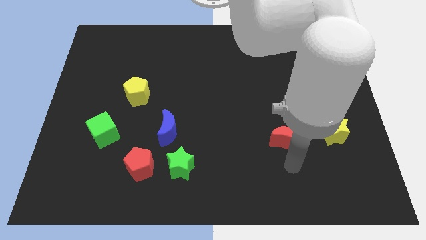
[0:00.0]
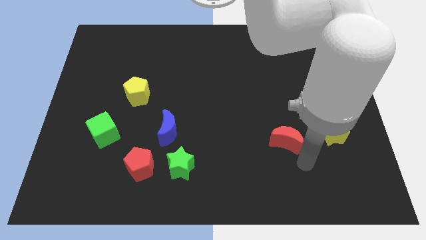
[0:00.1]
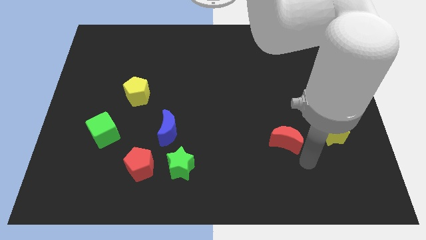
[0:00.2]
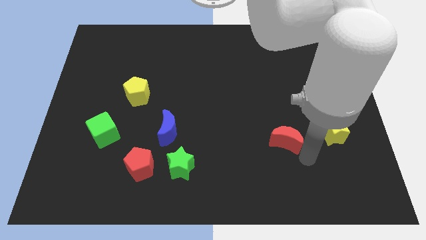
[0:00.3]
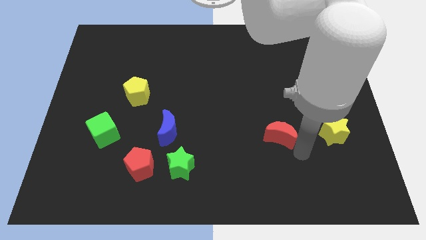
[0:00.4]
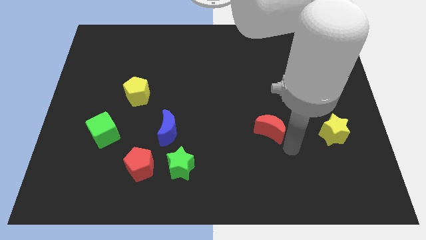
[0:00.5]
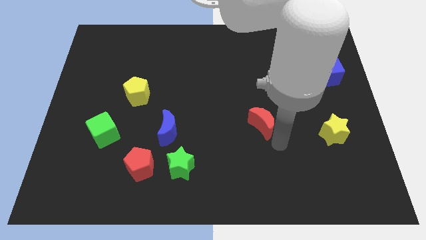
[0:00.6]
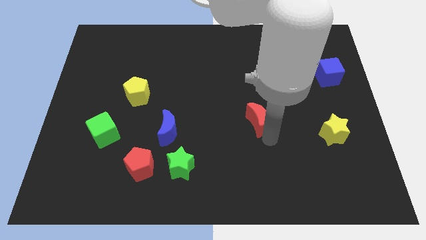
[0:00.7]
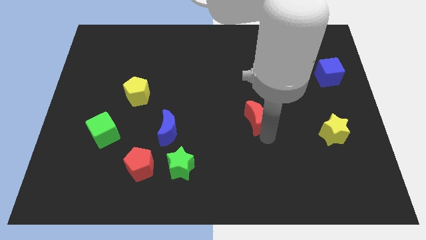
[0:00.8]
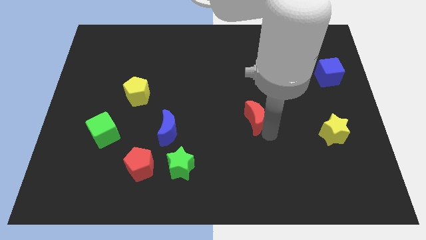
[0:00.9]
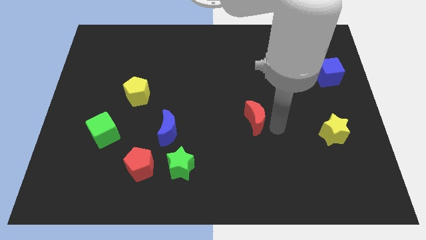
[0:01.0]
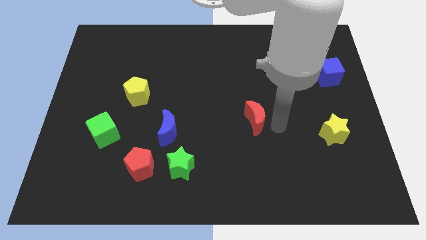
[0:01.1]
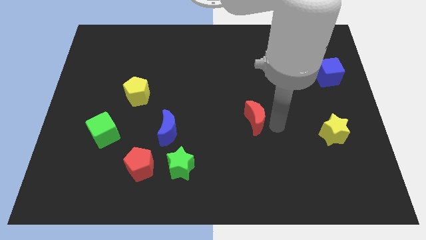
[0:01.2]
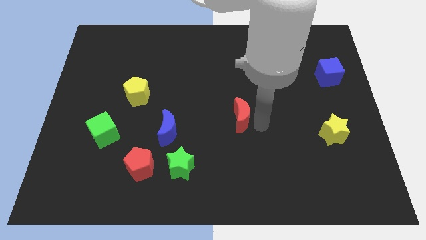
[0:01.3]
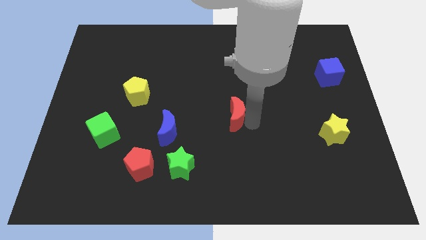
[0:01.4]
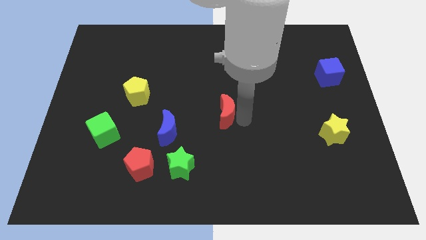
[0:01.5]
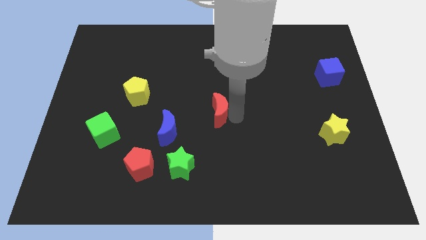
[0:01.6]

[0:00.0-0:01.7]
move the red crescent to the center of the board

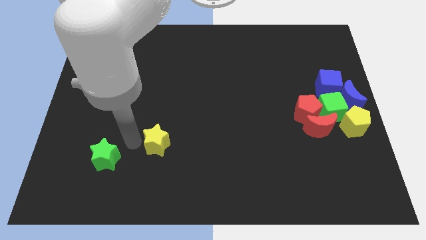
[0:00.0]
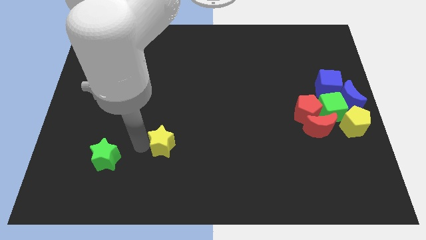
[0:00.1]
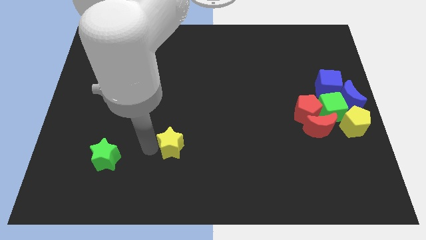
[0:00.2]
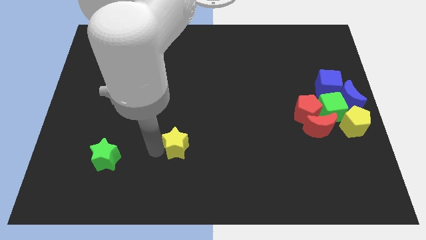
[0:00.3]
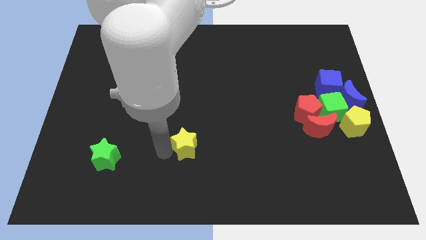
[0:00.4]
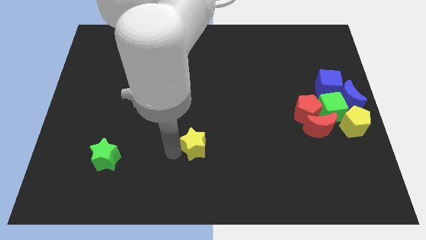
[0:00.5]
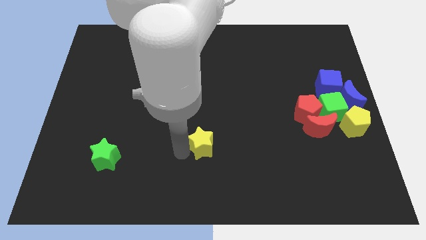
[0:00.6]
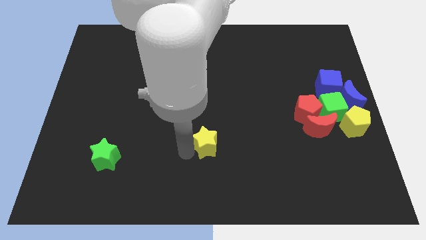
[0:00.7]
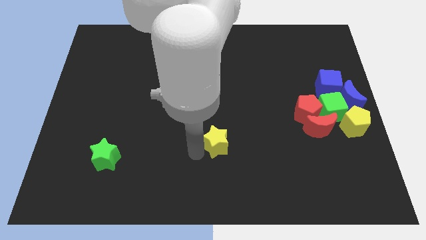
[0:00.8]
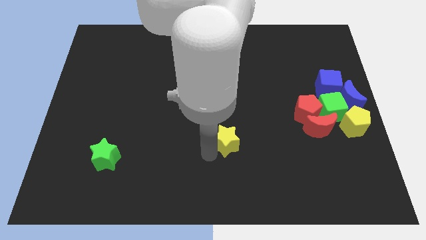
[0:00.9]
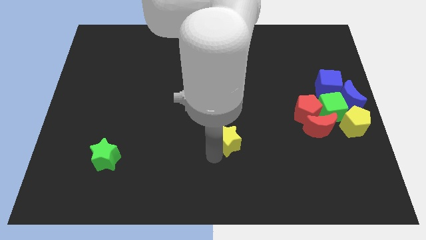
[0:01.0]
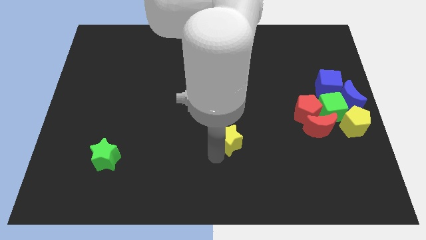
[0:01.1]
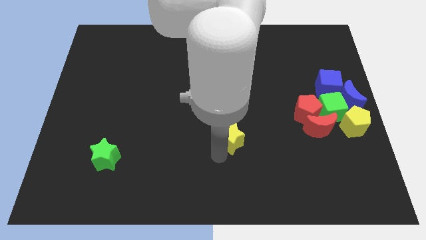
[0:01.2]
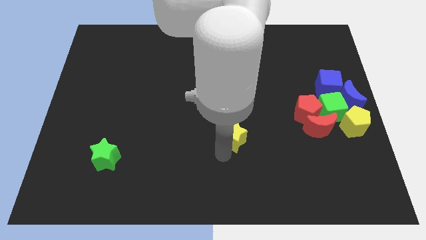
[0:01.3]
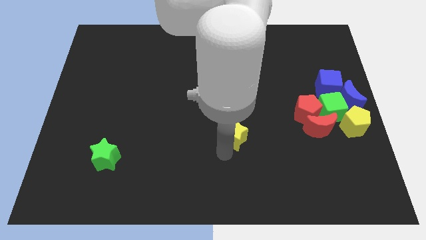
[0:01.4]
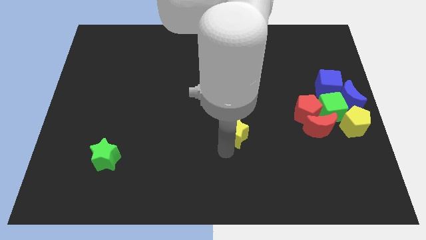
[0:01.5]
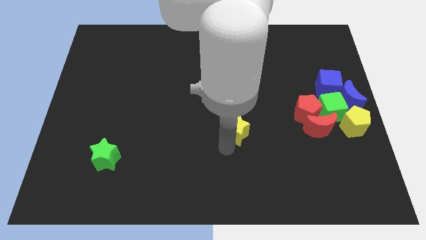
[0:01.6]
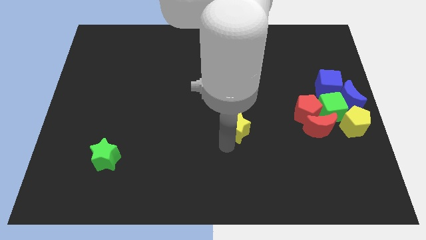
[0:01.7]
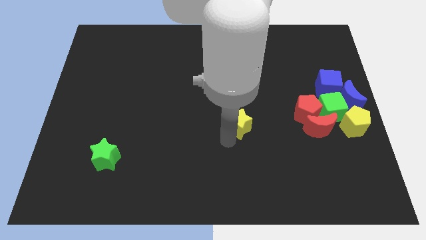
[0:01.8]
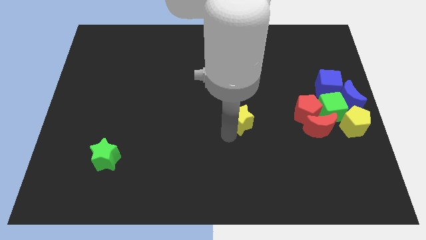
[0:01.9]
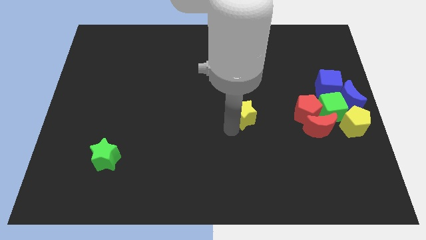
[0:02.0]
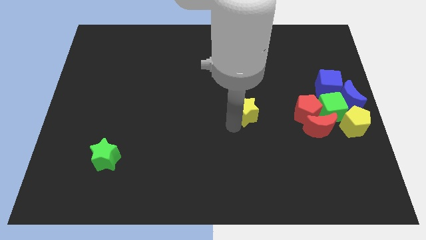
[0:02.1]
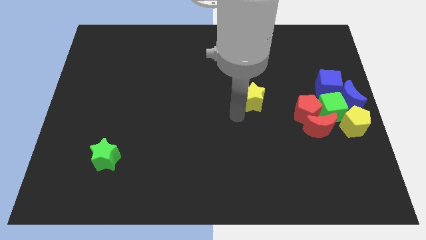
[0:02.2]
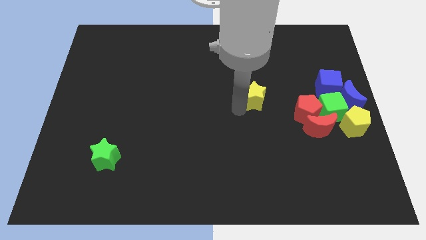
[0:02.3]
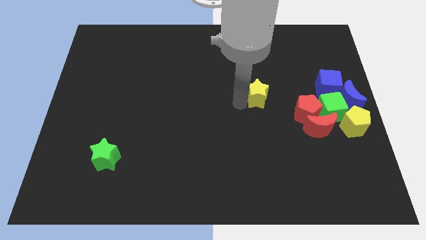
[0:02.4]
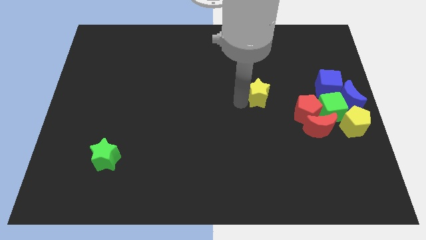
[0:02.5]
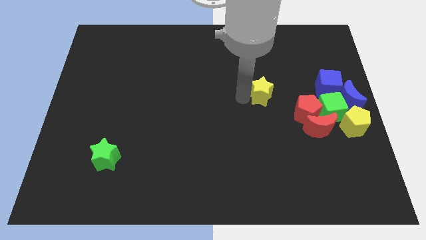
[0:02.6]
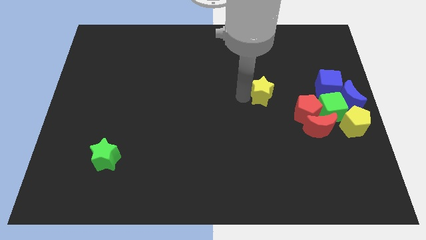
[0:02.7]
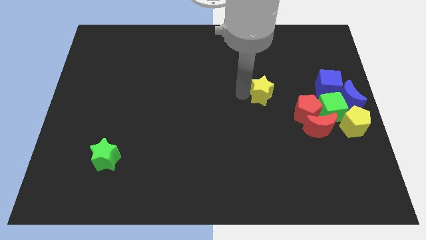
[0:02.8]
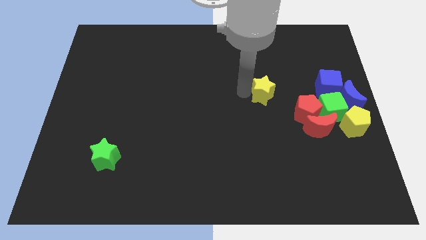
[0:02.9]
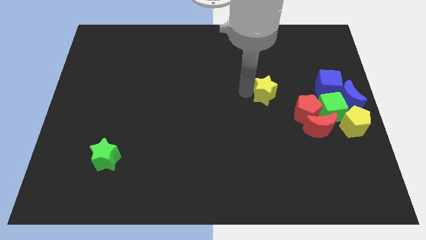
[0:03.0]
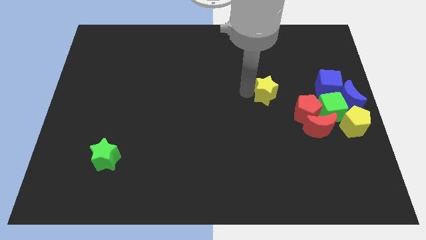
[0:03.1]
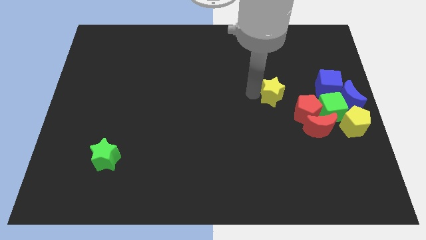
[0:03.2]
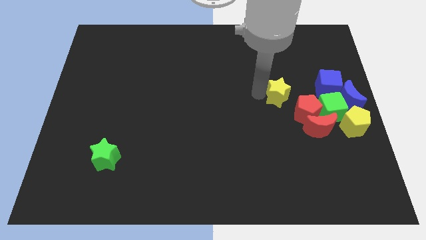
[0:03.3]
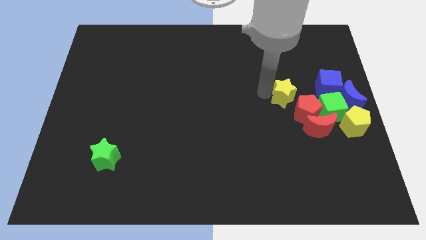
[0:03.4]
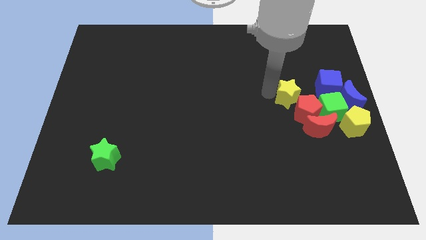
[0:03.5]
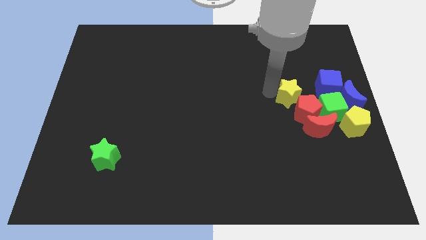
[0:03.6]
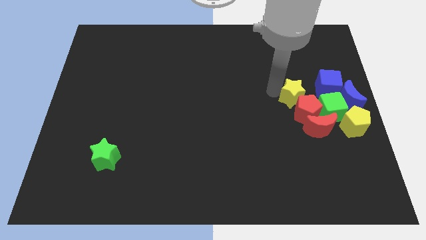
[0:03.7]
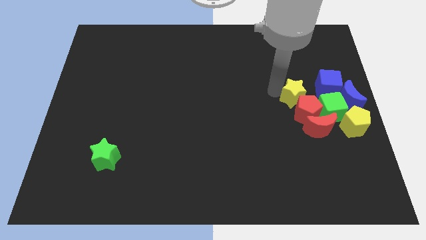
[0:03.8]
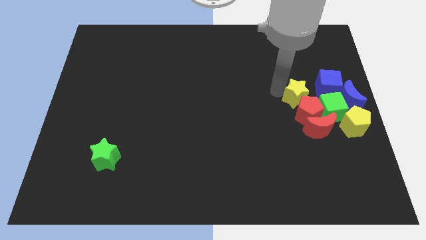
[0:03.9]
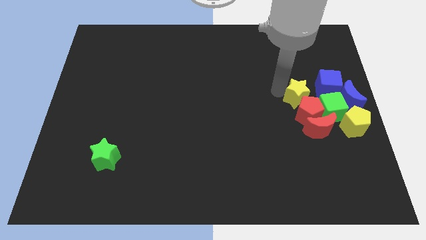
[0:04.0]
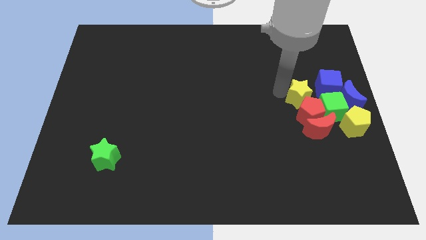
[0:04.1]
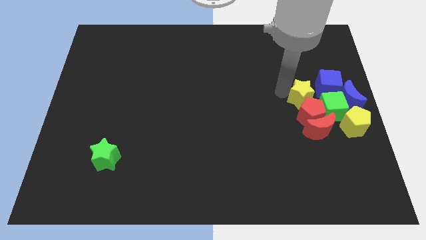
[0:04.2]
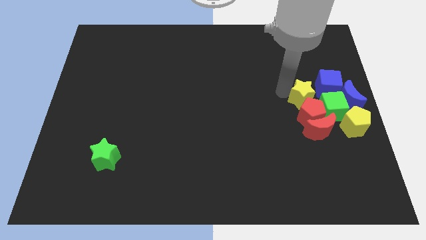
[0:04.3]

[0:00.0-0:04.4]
place yellow star on top of red pentagon

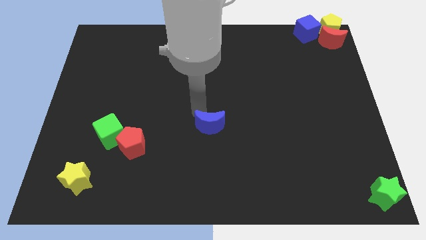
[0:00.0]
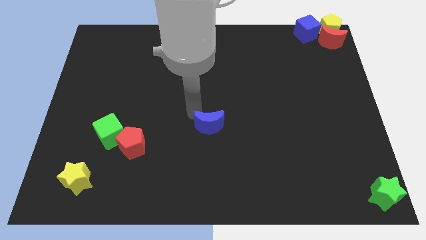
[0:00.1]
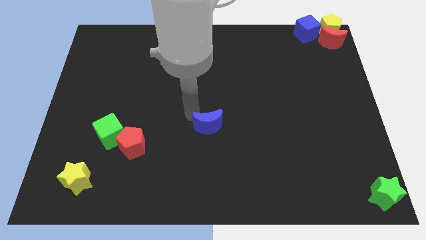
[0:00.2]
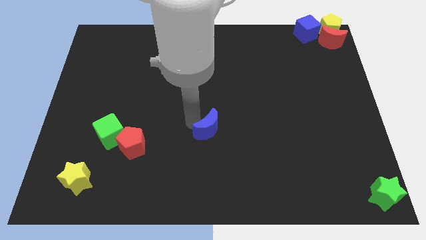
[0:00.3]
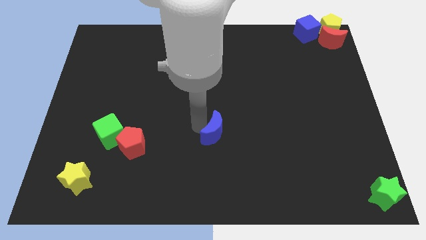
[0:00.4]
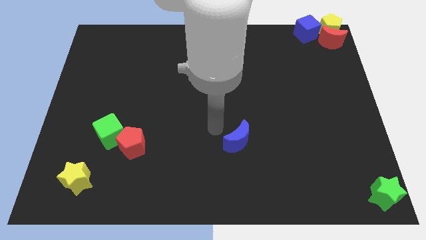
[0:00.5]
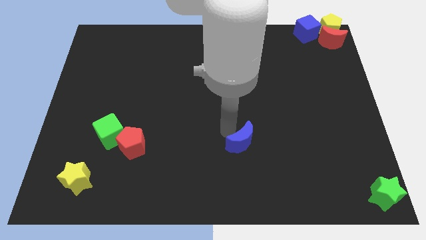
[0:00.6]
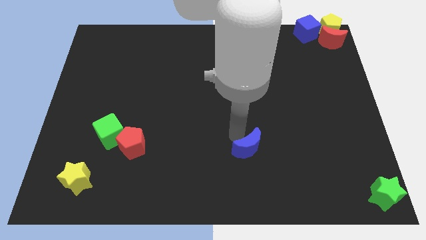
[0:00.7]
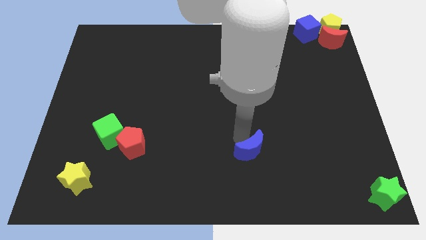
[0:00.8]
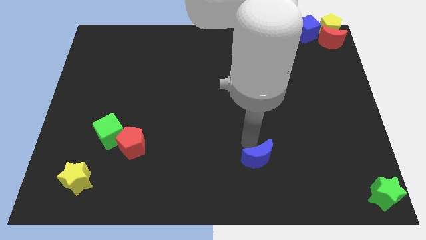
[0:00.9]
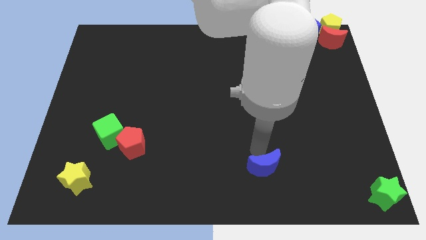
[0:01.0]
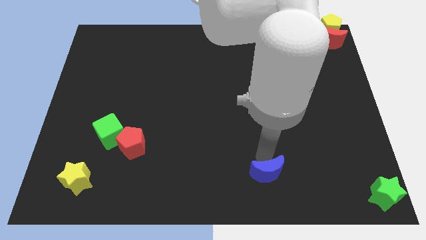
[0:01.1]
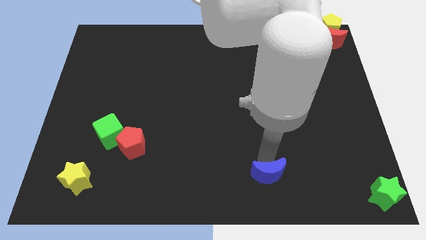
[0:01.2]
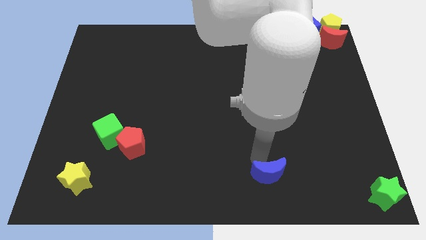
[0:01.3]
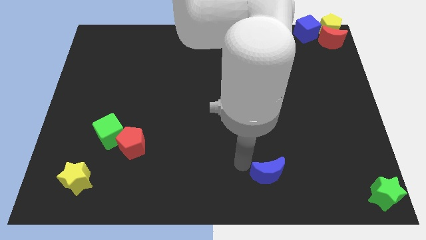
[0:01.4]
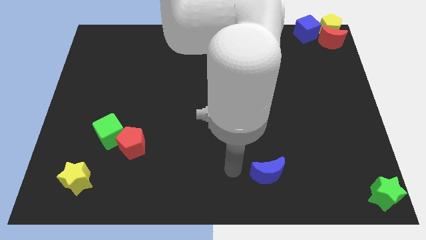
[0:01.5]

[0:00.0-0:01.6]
move the blue moon diagonally bottom right to the red pentagon

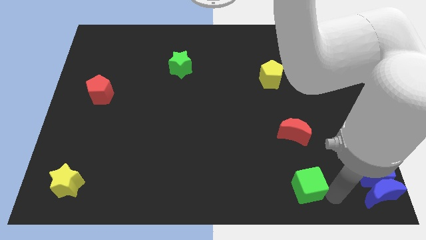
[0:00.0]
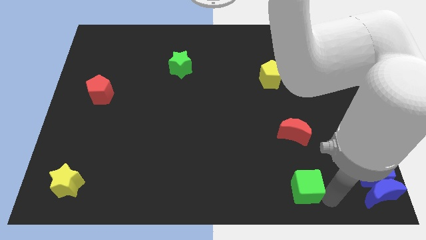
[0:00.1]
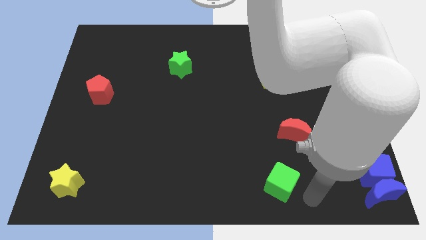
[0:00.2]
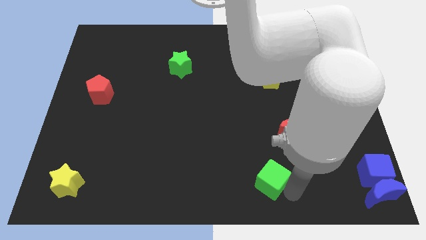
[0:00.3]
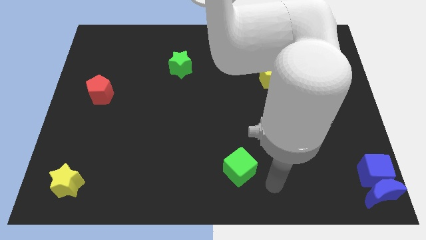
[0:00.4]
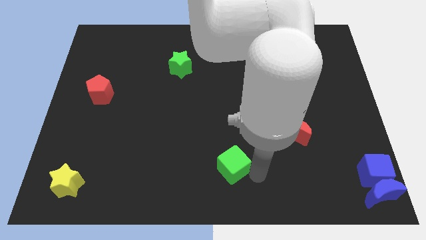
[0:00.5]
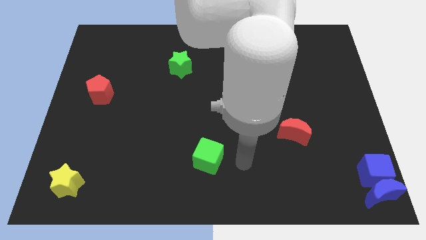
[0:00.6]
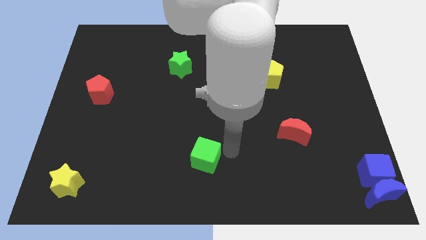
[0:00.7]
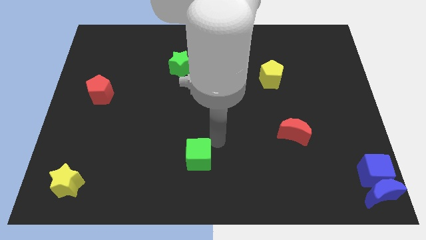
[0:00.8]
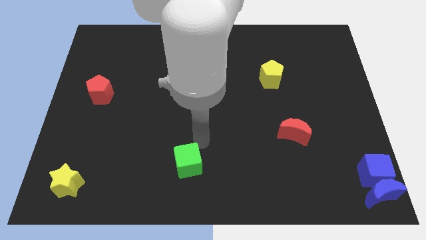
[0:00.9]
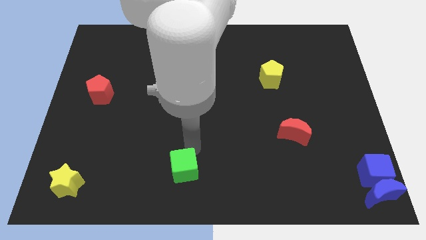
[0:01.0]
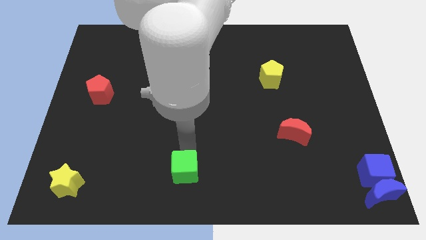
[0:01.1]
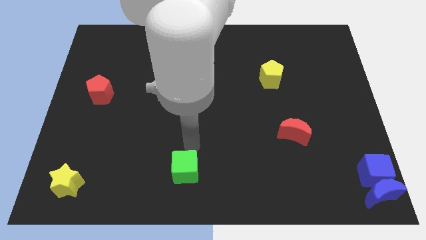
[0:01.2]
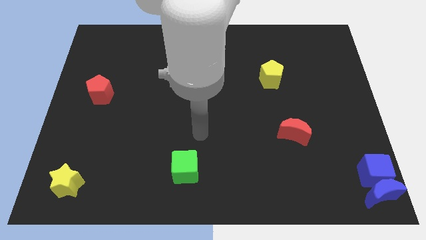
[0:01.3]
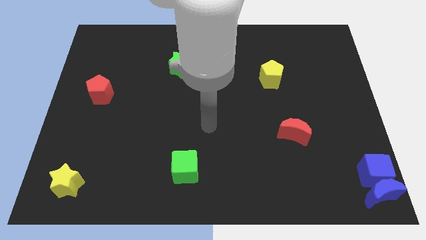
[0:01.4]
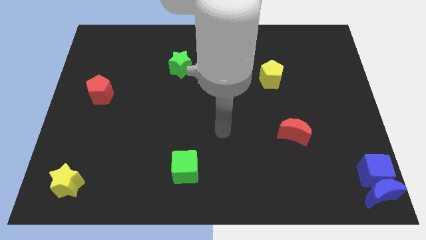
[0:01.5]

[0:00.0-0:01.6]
move the green cube towards the bottom center of the board
